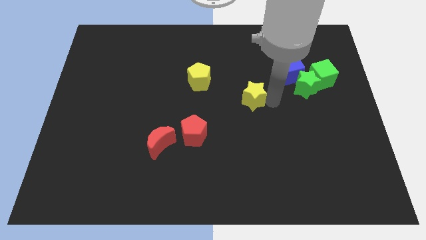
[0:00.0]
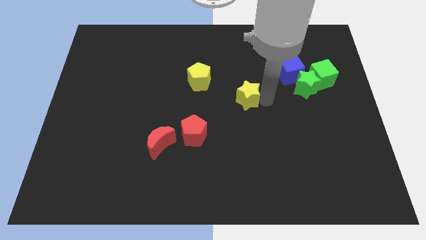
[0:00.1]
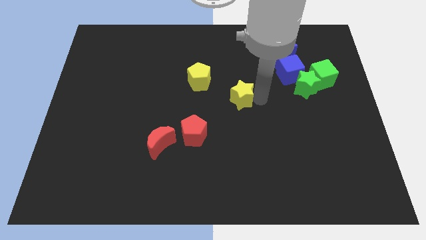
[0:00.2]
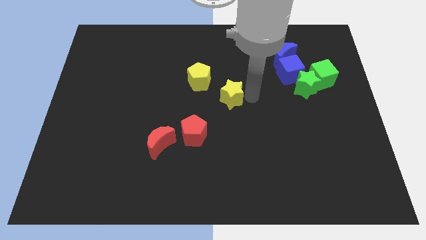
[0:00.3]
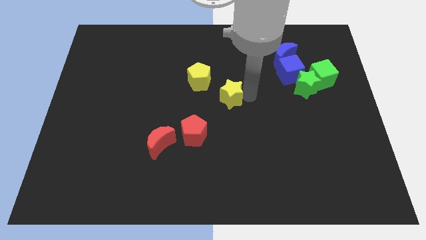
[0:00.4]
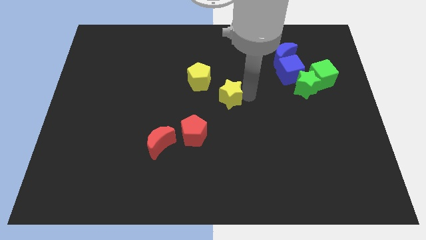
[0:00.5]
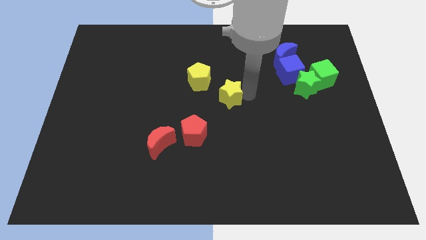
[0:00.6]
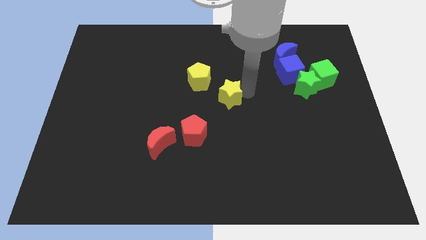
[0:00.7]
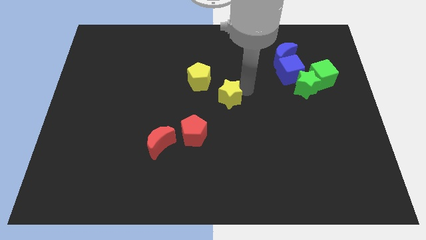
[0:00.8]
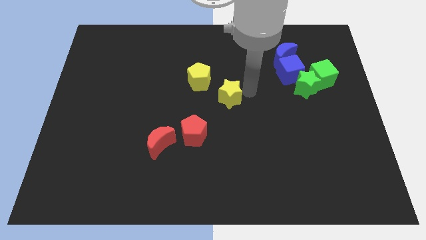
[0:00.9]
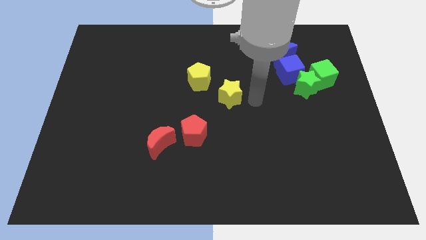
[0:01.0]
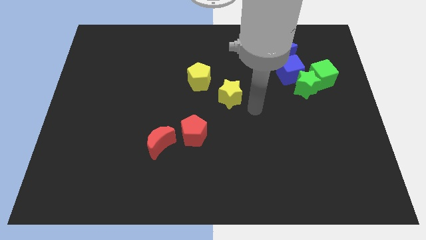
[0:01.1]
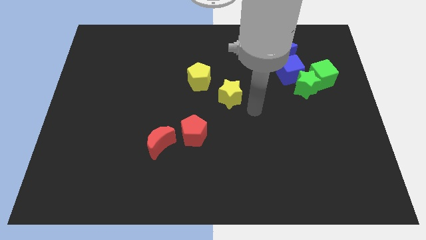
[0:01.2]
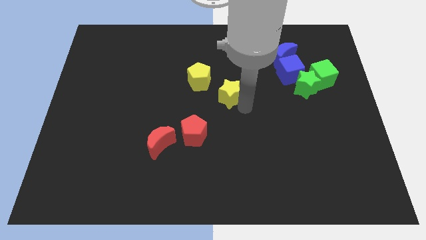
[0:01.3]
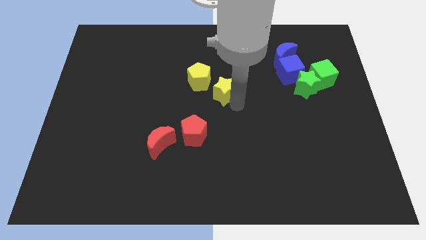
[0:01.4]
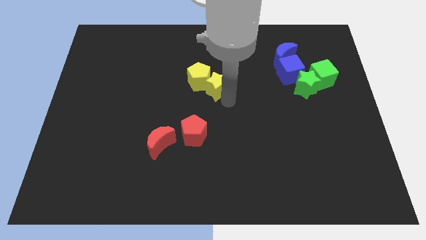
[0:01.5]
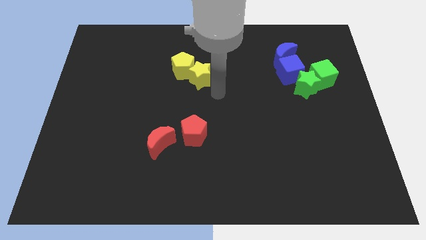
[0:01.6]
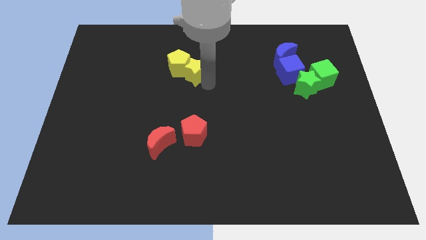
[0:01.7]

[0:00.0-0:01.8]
move the yellow star into the yellow pentagon

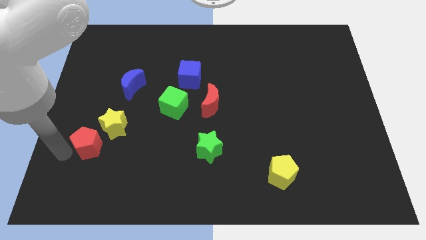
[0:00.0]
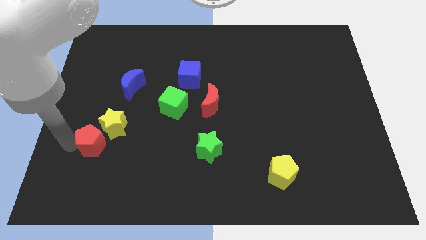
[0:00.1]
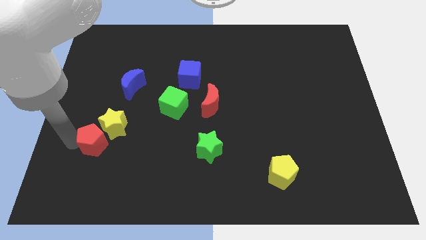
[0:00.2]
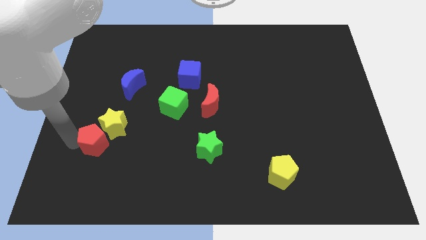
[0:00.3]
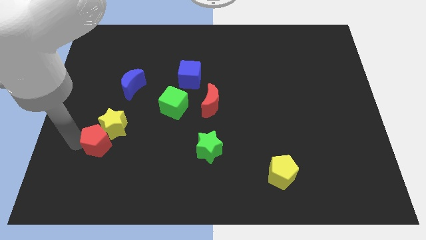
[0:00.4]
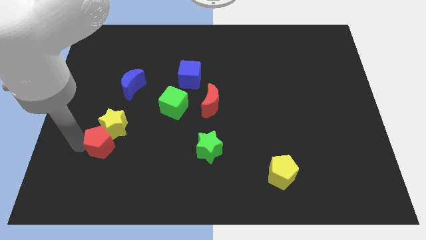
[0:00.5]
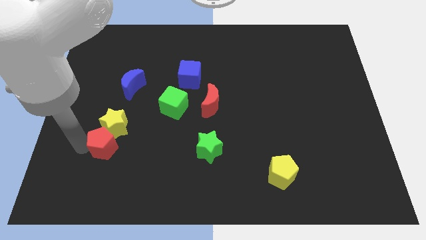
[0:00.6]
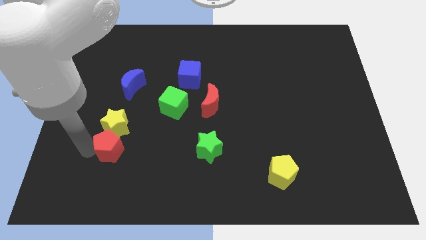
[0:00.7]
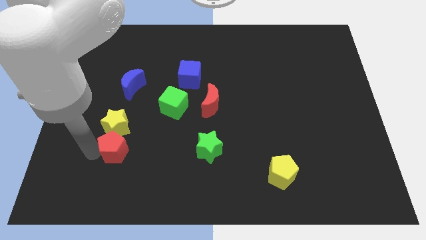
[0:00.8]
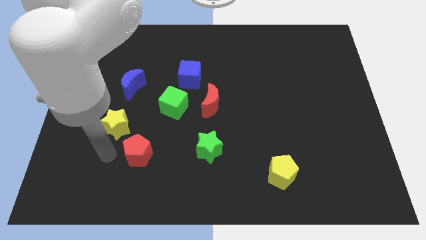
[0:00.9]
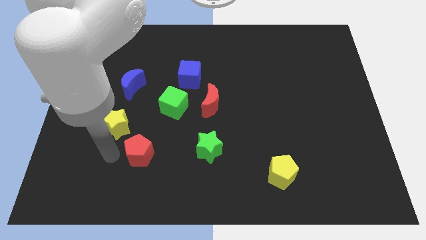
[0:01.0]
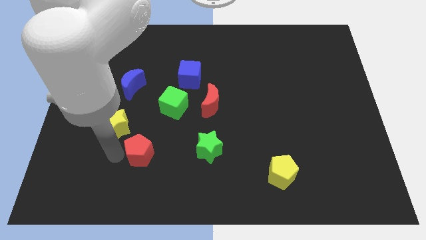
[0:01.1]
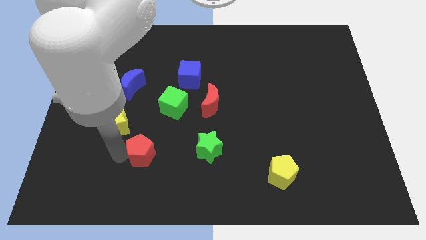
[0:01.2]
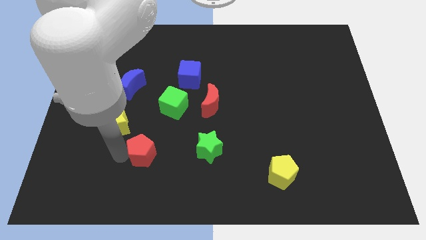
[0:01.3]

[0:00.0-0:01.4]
push the red pentagon bottom right side of the yellow star

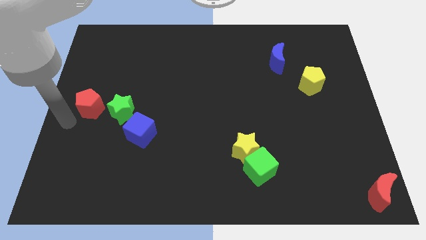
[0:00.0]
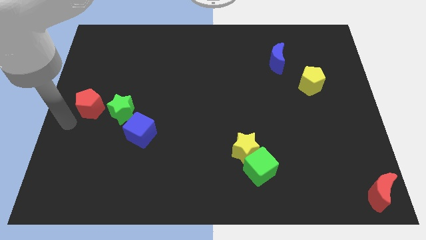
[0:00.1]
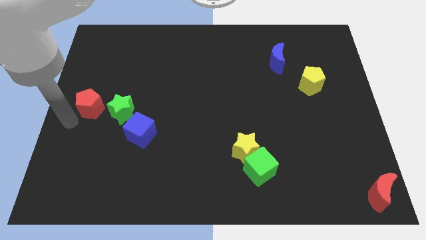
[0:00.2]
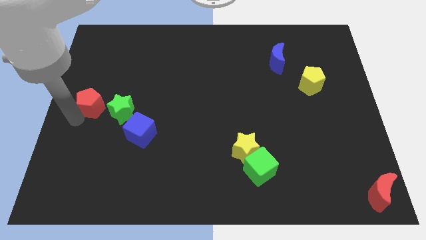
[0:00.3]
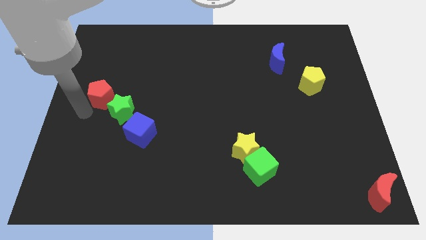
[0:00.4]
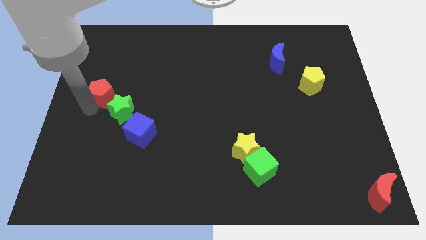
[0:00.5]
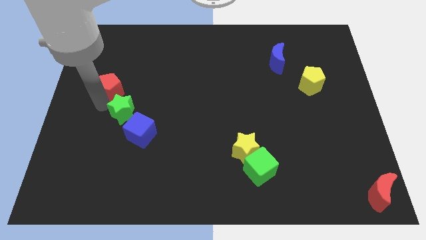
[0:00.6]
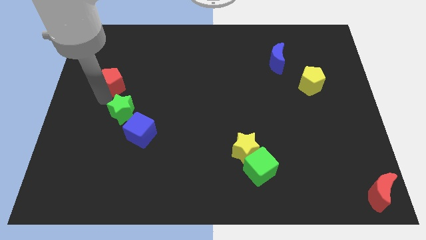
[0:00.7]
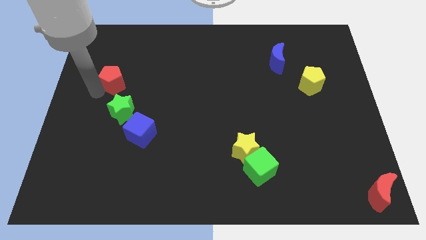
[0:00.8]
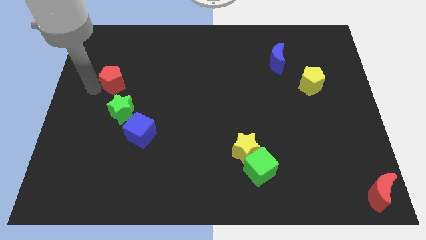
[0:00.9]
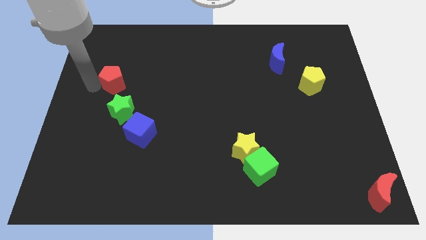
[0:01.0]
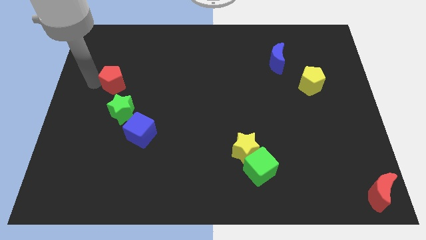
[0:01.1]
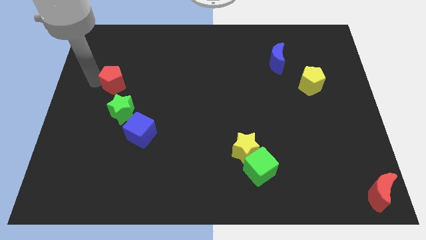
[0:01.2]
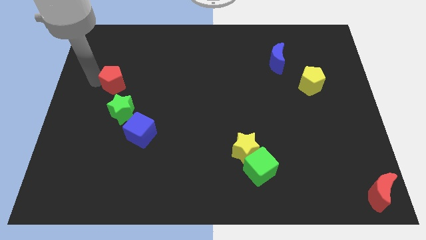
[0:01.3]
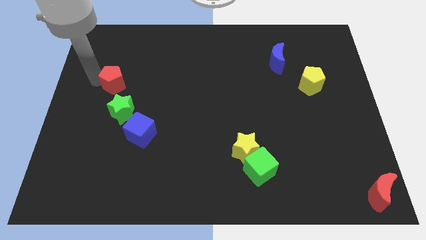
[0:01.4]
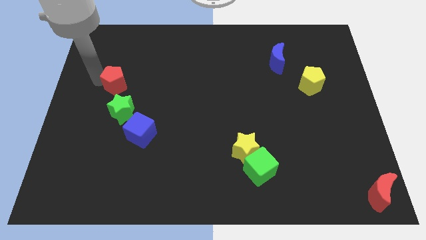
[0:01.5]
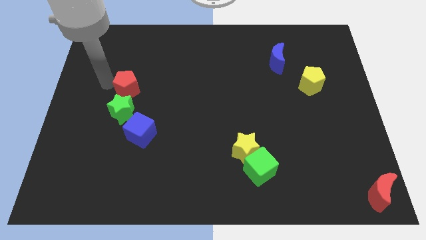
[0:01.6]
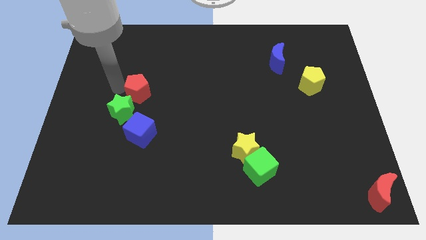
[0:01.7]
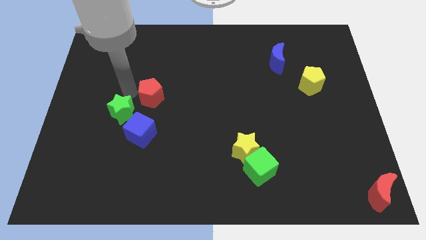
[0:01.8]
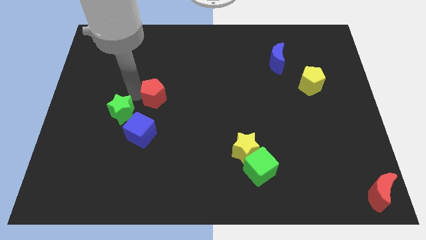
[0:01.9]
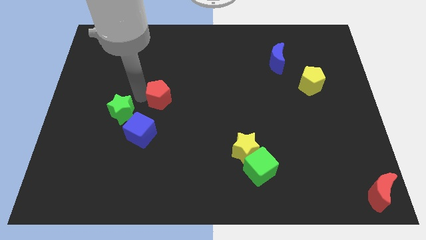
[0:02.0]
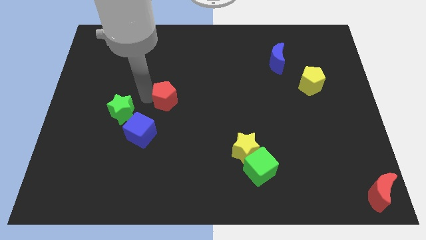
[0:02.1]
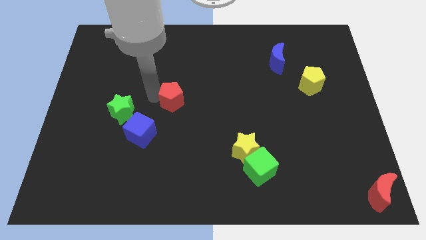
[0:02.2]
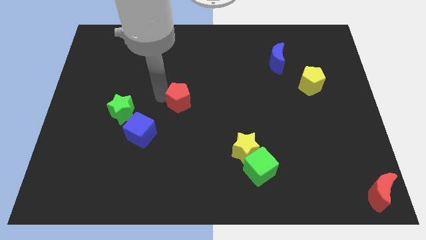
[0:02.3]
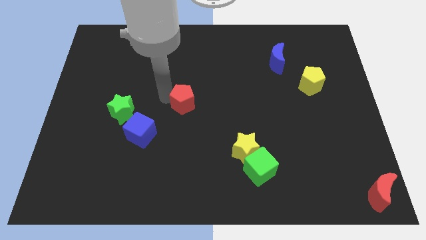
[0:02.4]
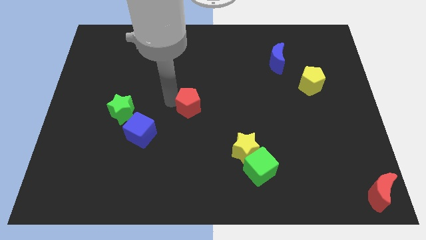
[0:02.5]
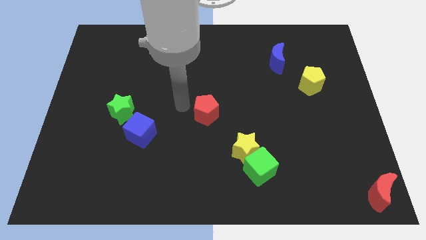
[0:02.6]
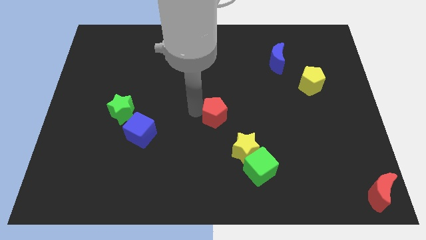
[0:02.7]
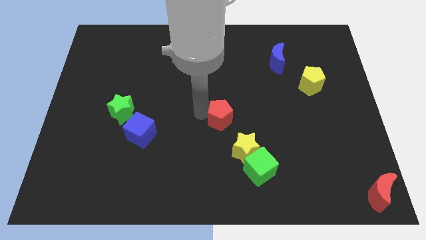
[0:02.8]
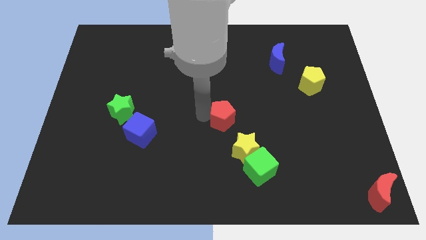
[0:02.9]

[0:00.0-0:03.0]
push the red pentagon to the center of the board

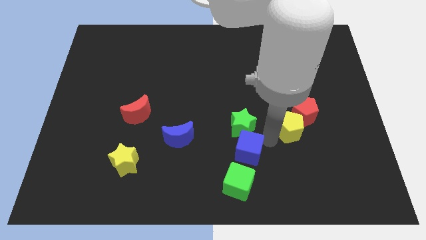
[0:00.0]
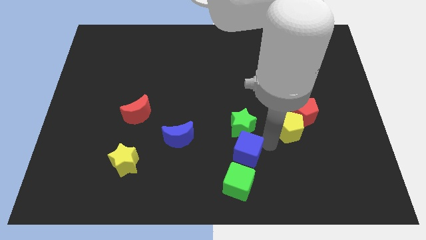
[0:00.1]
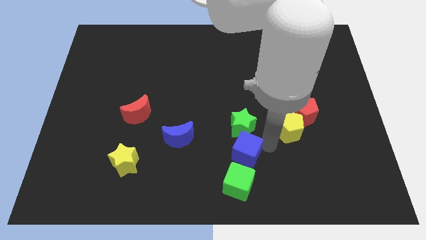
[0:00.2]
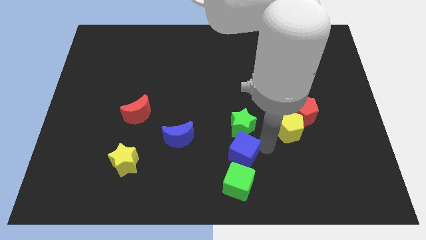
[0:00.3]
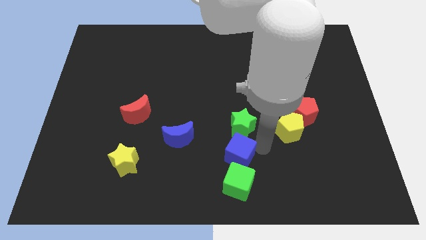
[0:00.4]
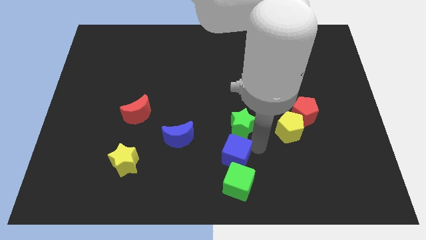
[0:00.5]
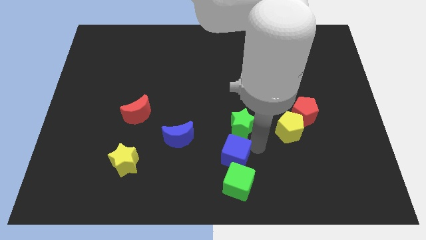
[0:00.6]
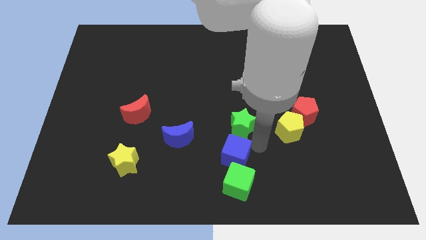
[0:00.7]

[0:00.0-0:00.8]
place the blue cube below the green star

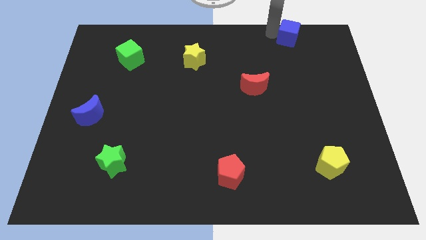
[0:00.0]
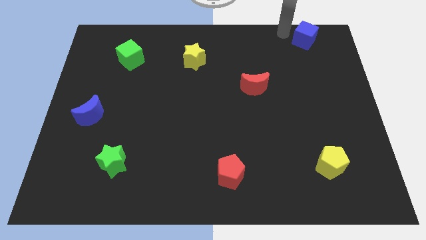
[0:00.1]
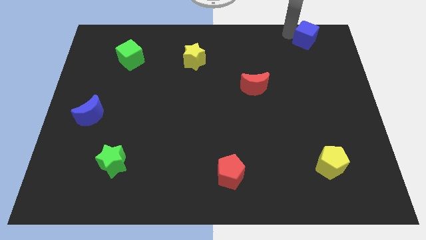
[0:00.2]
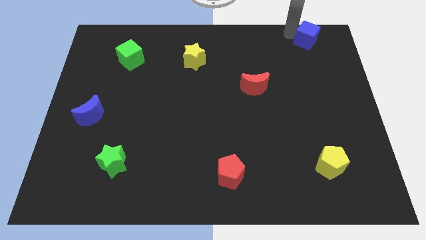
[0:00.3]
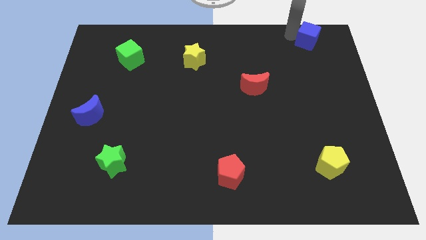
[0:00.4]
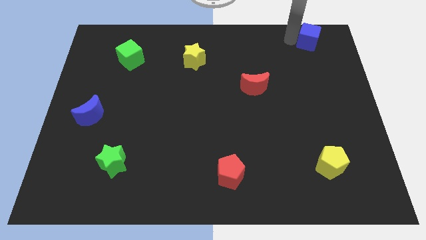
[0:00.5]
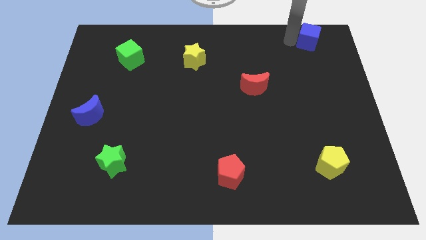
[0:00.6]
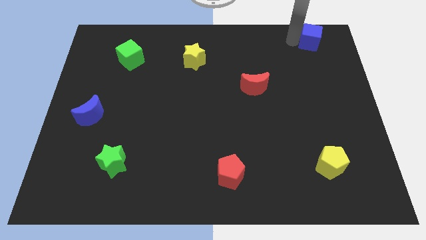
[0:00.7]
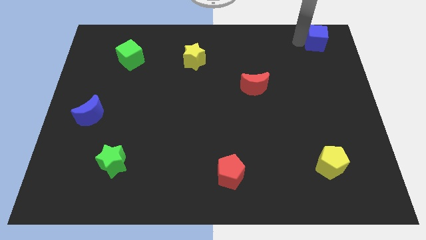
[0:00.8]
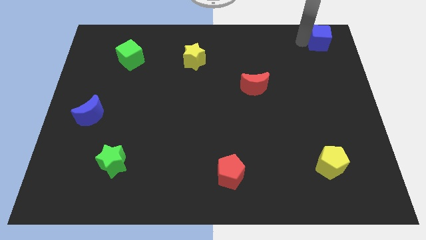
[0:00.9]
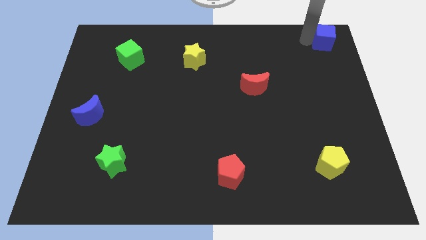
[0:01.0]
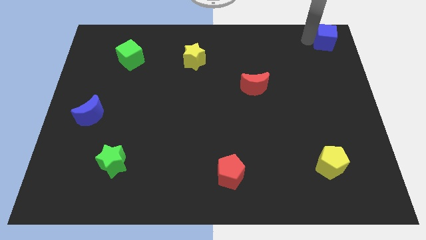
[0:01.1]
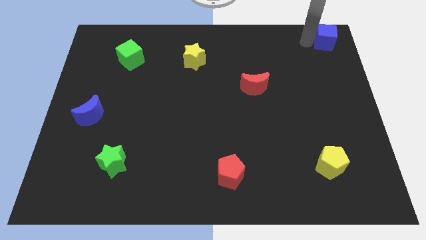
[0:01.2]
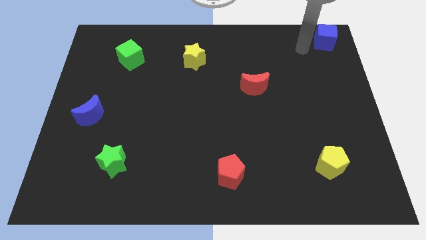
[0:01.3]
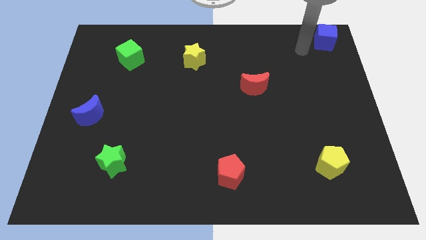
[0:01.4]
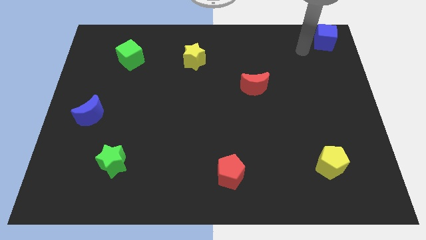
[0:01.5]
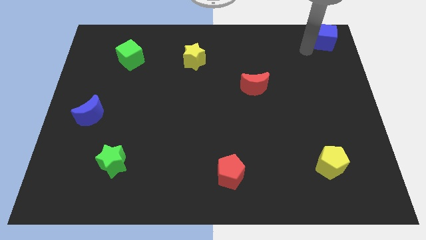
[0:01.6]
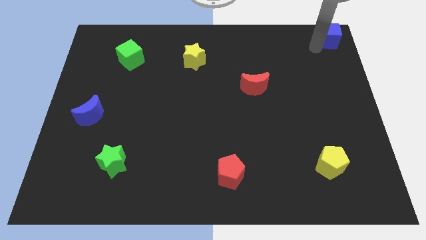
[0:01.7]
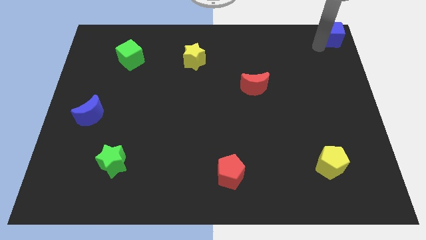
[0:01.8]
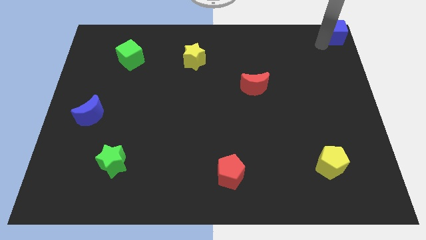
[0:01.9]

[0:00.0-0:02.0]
push the blue cube to the top right corner
